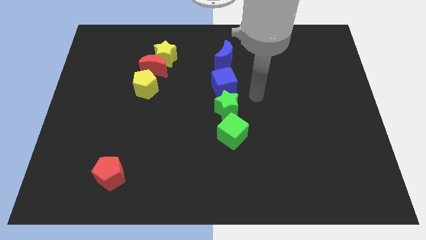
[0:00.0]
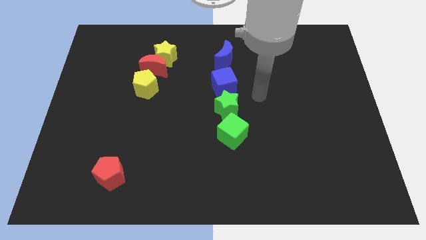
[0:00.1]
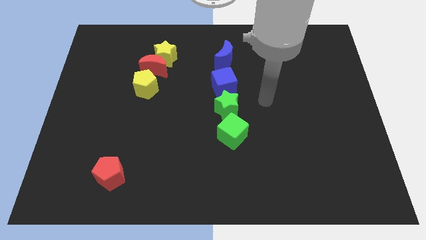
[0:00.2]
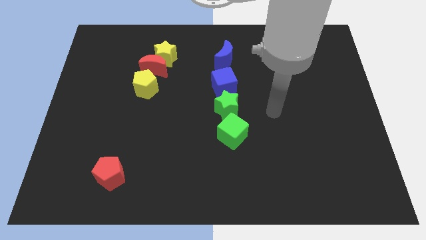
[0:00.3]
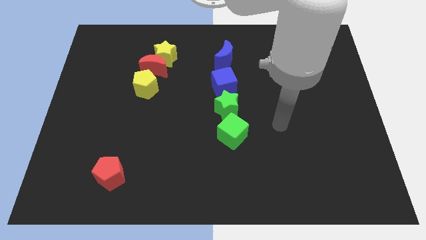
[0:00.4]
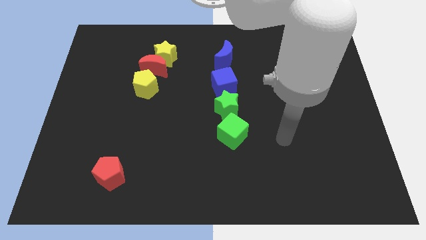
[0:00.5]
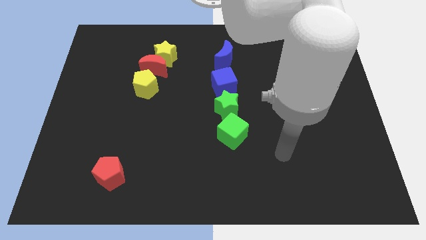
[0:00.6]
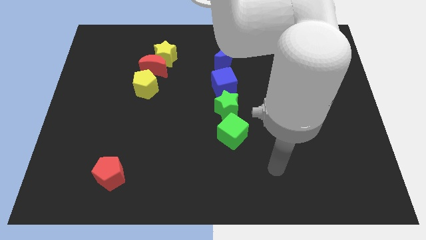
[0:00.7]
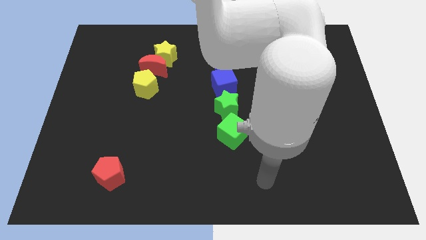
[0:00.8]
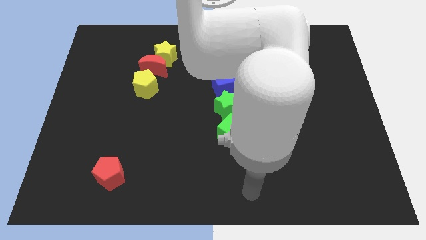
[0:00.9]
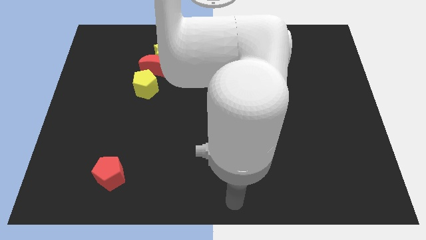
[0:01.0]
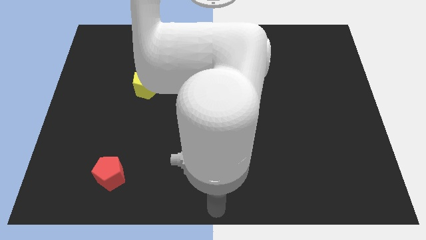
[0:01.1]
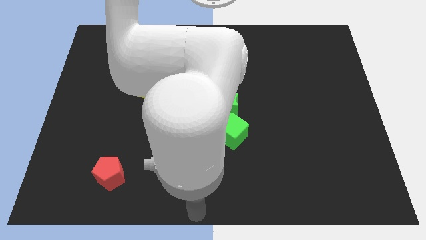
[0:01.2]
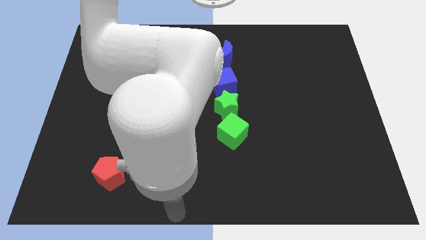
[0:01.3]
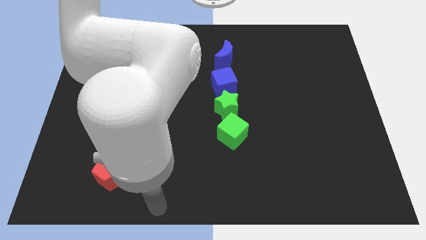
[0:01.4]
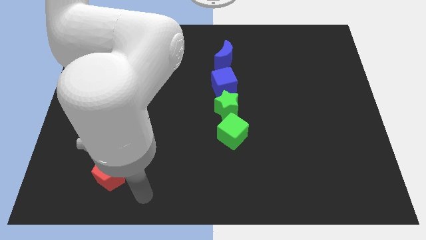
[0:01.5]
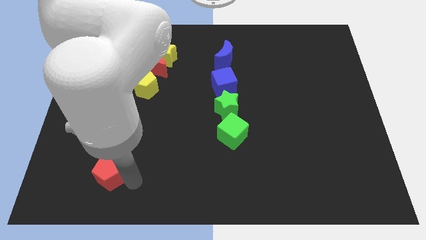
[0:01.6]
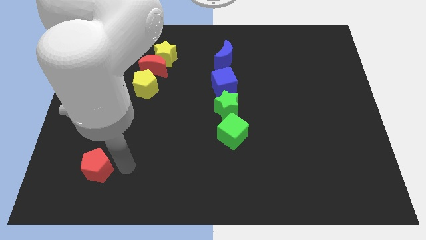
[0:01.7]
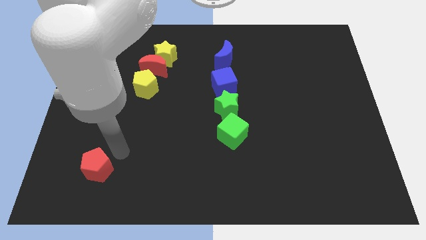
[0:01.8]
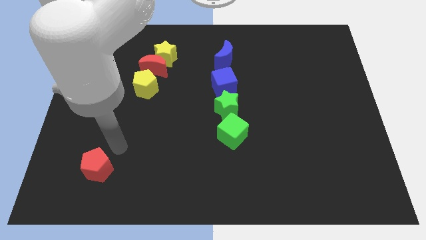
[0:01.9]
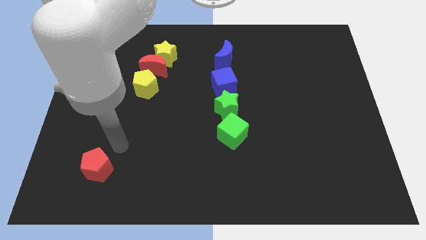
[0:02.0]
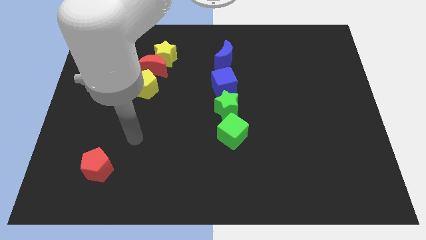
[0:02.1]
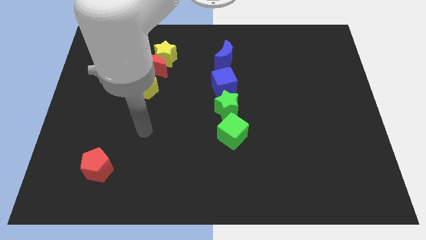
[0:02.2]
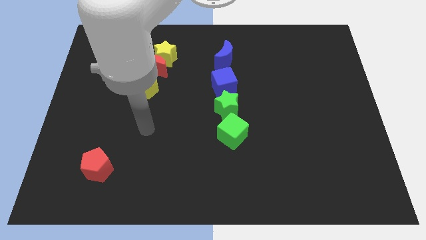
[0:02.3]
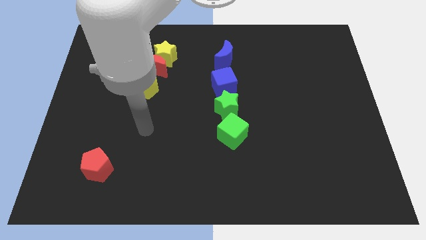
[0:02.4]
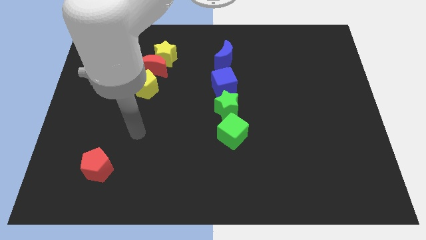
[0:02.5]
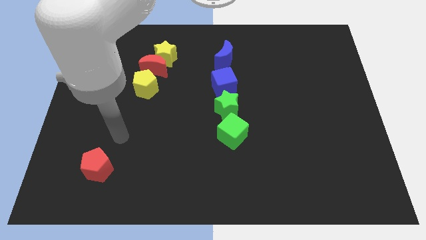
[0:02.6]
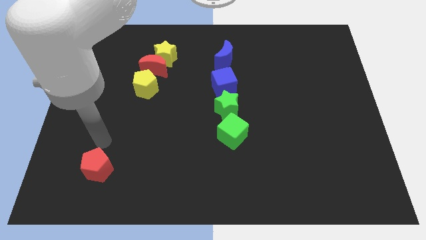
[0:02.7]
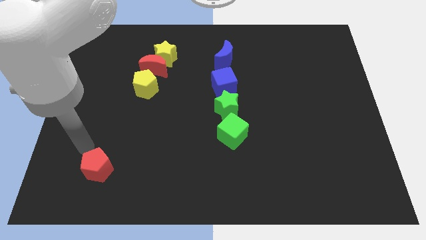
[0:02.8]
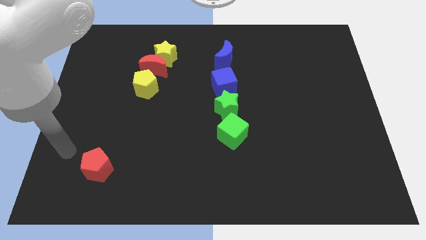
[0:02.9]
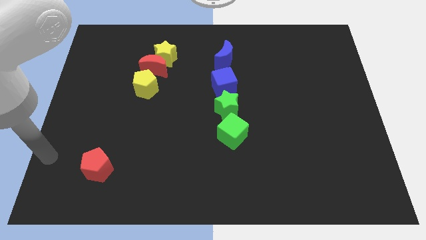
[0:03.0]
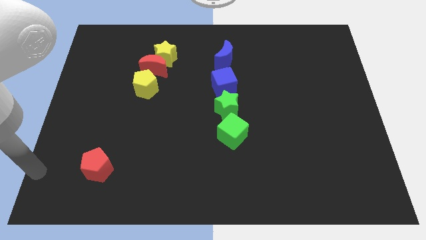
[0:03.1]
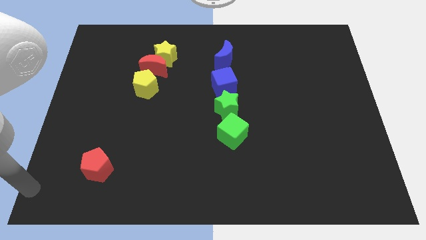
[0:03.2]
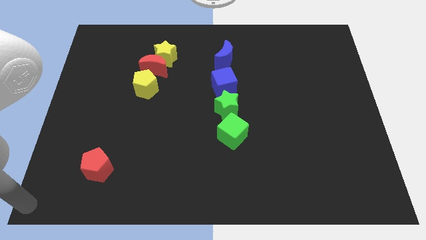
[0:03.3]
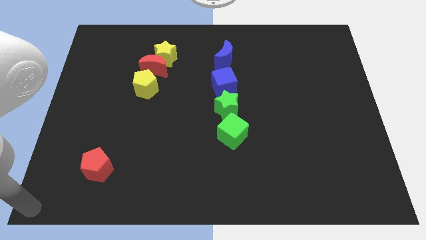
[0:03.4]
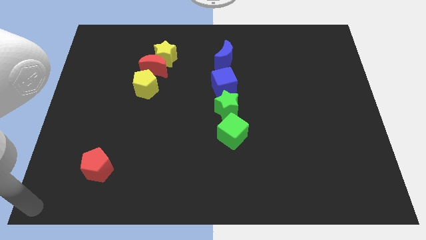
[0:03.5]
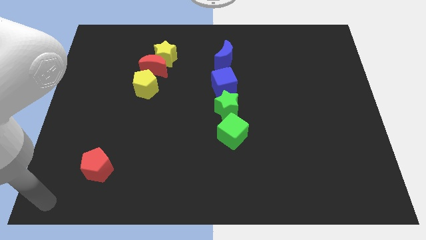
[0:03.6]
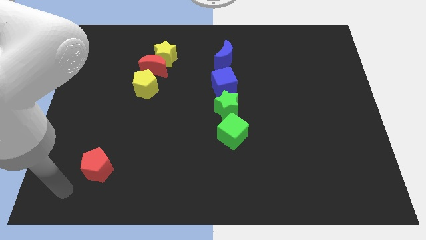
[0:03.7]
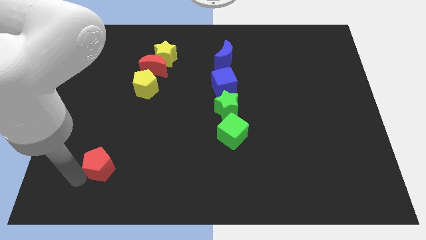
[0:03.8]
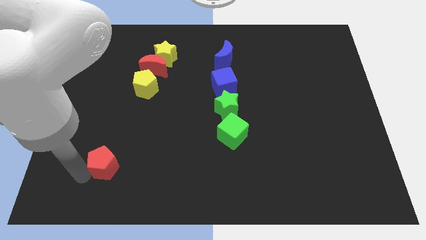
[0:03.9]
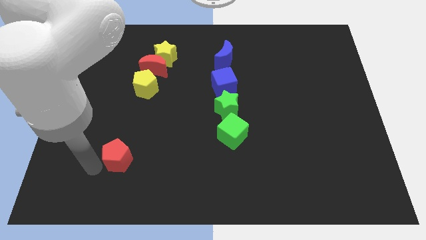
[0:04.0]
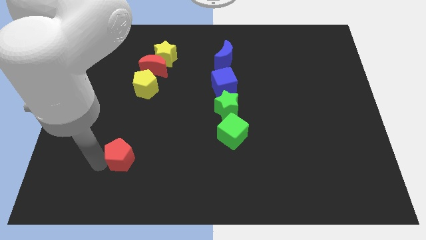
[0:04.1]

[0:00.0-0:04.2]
push the red pentagon to the right of the board

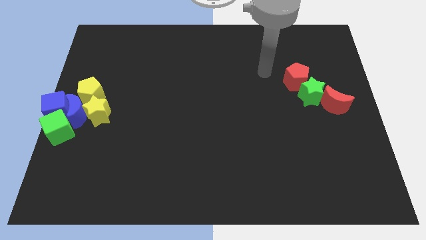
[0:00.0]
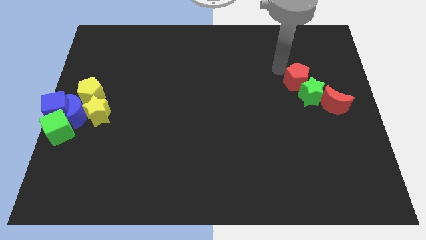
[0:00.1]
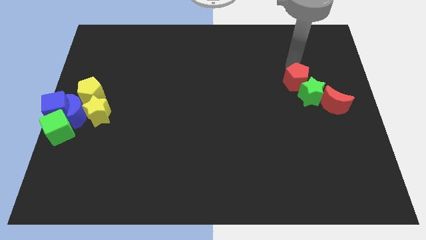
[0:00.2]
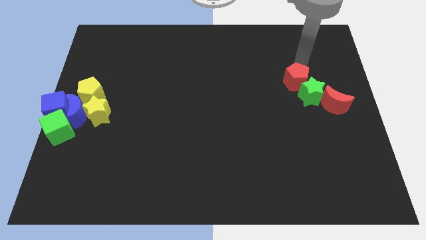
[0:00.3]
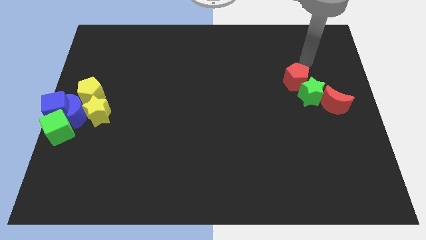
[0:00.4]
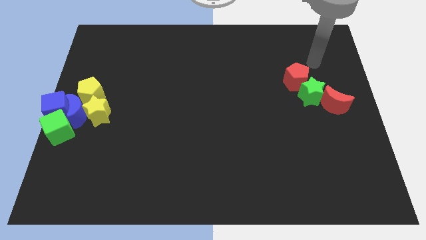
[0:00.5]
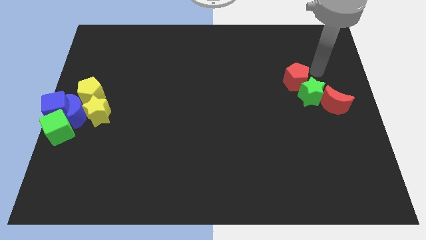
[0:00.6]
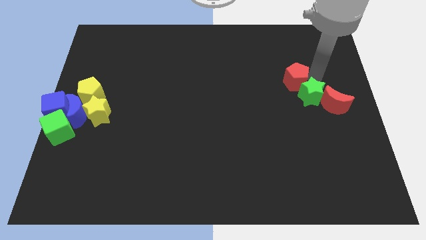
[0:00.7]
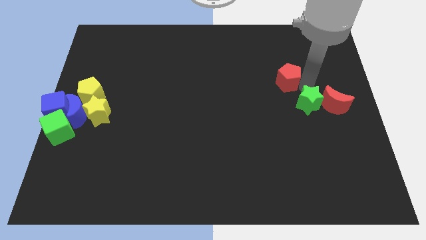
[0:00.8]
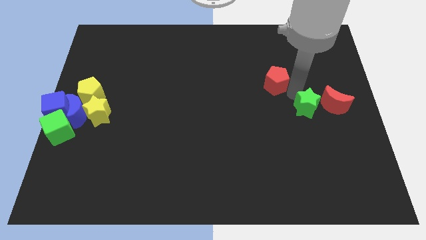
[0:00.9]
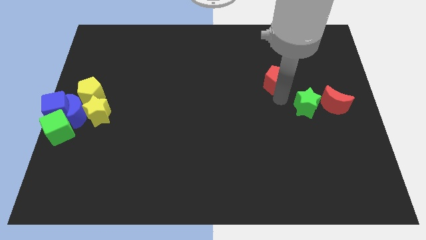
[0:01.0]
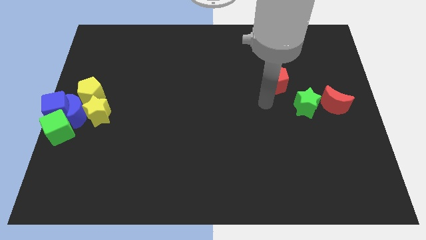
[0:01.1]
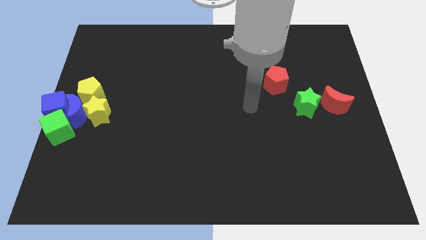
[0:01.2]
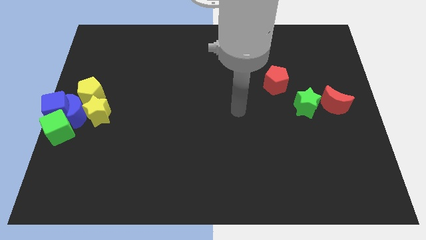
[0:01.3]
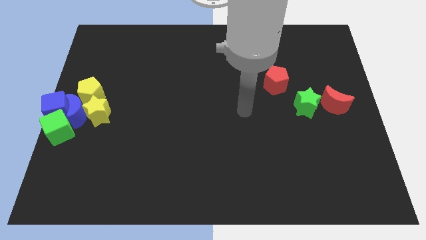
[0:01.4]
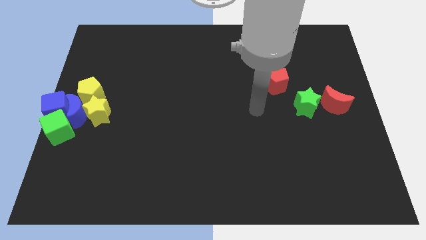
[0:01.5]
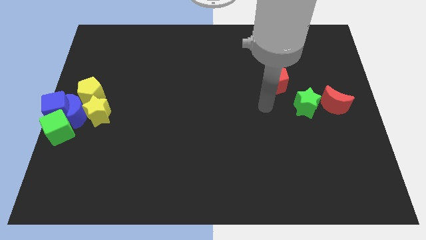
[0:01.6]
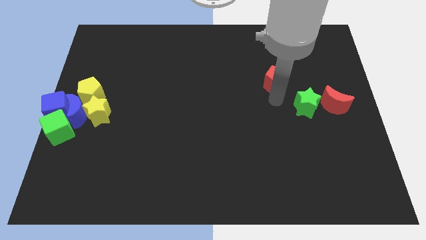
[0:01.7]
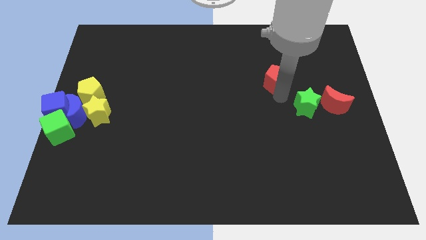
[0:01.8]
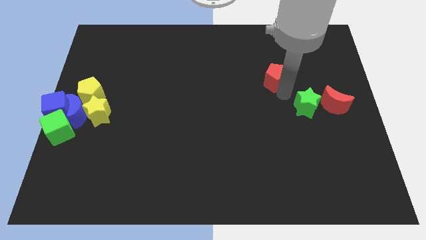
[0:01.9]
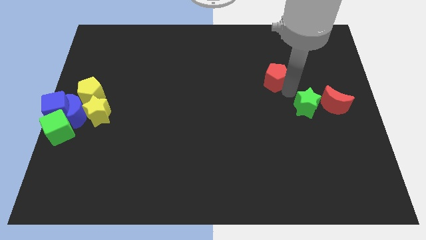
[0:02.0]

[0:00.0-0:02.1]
separate red pentagon and green star

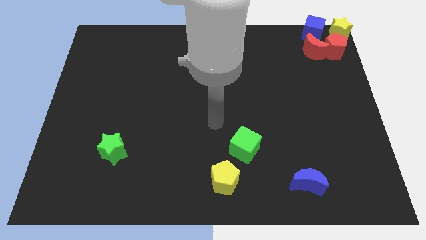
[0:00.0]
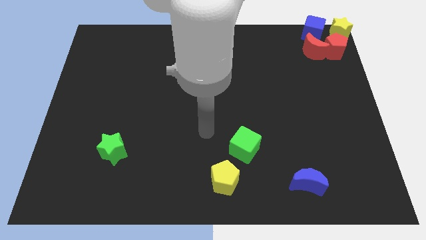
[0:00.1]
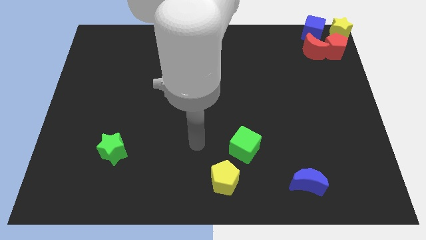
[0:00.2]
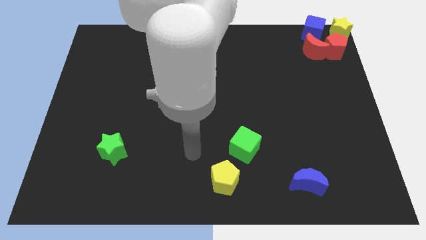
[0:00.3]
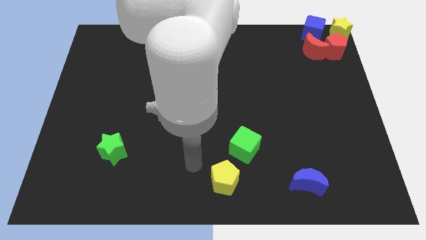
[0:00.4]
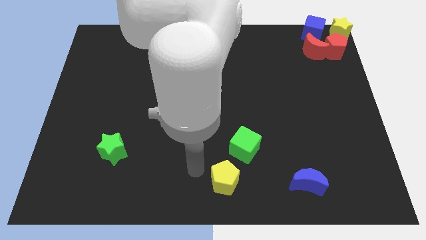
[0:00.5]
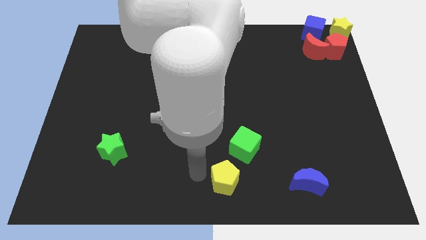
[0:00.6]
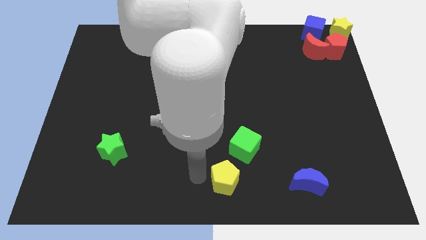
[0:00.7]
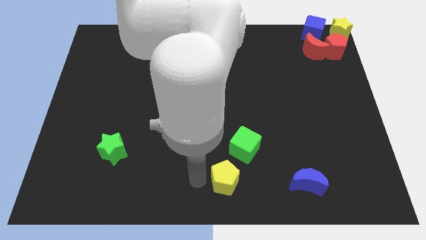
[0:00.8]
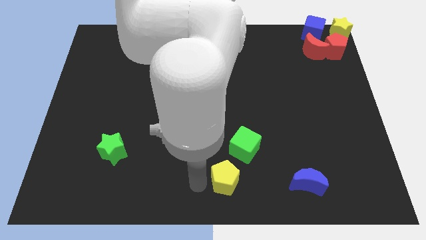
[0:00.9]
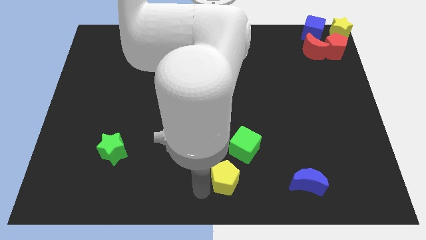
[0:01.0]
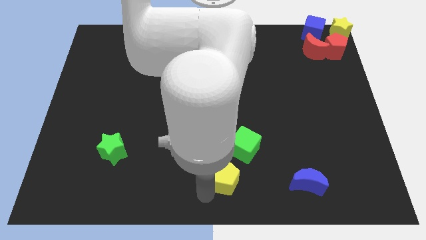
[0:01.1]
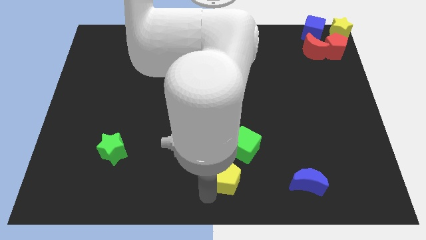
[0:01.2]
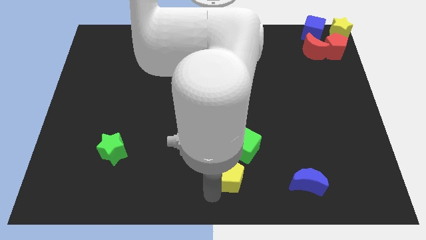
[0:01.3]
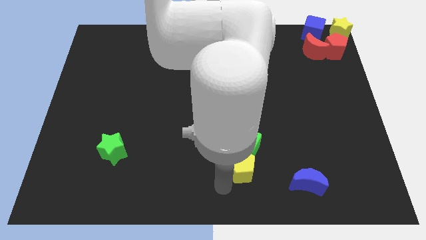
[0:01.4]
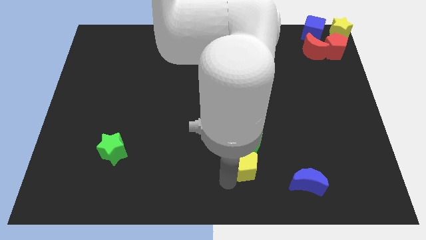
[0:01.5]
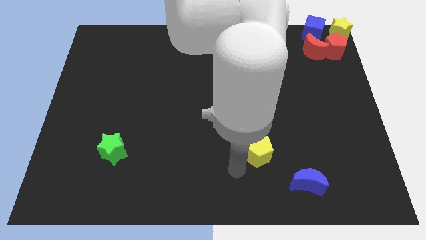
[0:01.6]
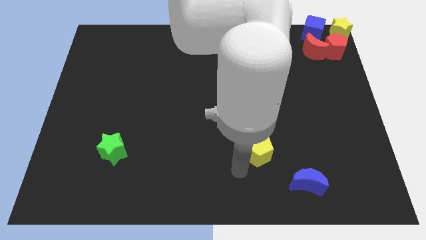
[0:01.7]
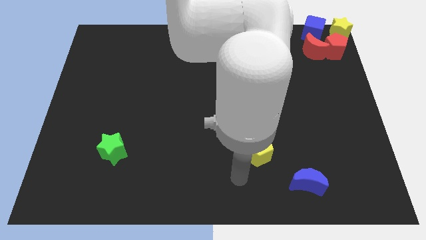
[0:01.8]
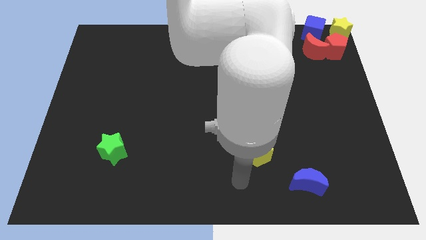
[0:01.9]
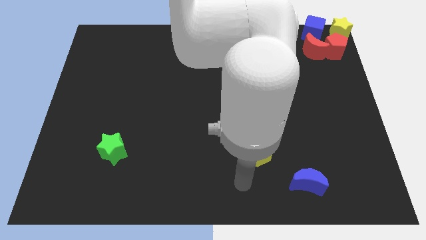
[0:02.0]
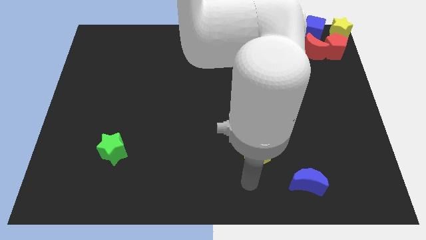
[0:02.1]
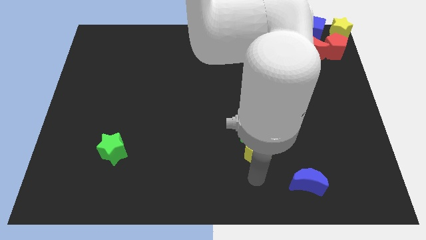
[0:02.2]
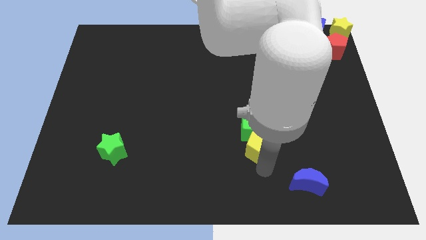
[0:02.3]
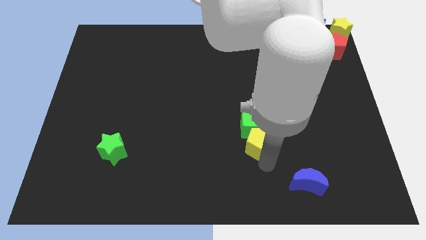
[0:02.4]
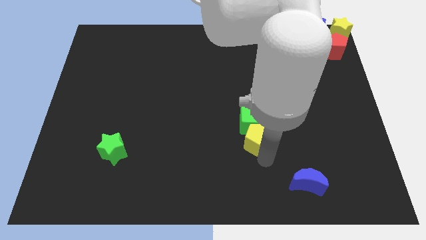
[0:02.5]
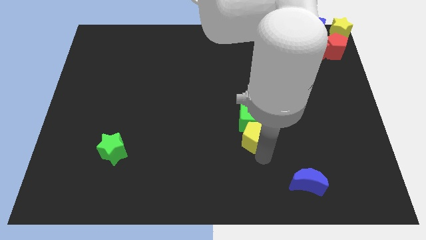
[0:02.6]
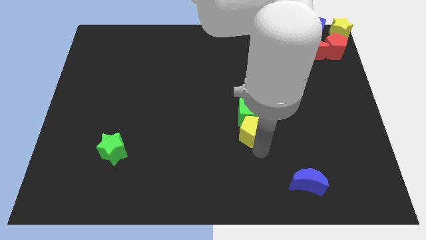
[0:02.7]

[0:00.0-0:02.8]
push green cube with yellow pentagon
